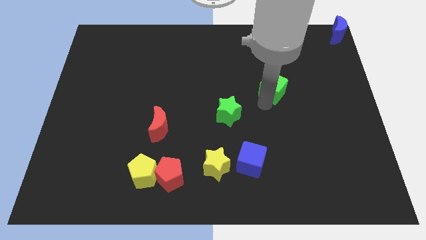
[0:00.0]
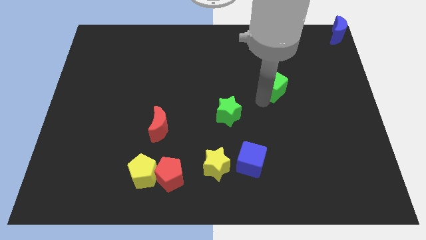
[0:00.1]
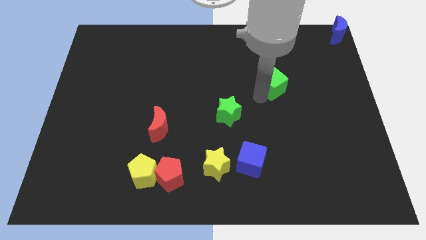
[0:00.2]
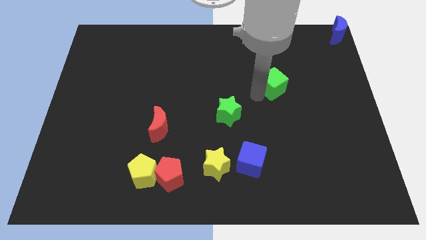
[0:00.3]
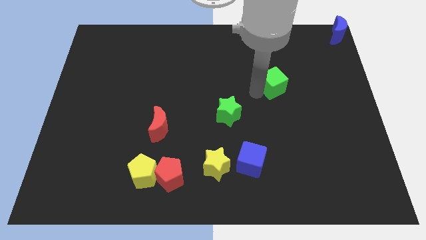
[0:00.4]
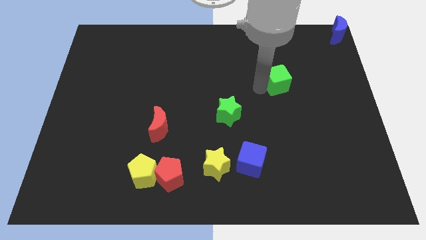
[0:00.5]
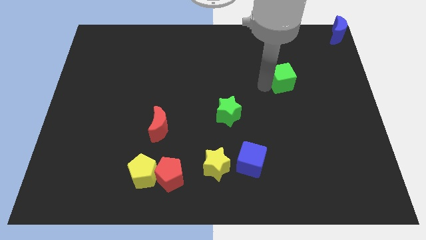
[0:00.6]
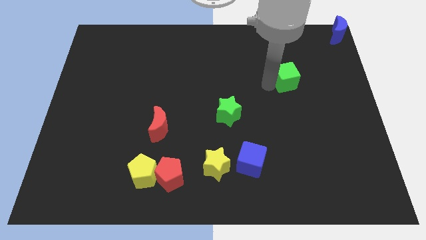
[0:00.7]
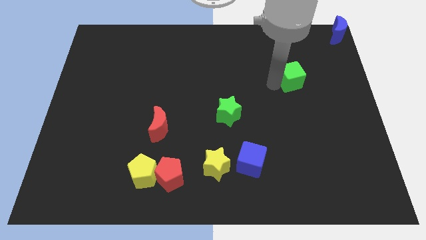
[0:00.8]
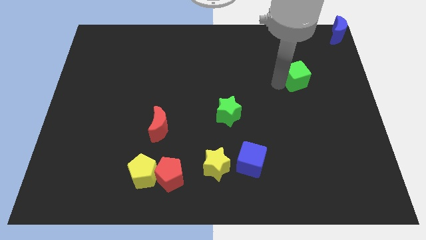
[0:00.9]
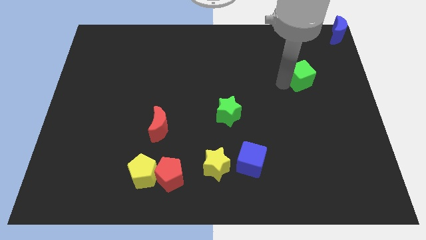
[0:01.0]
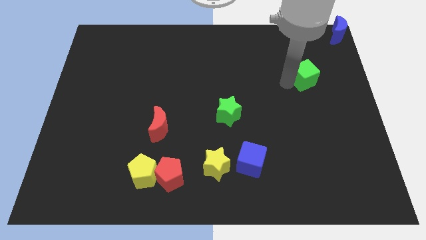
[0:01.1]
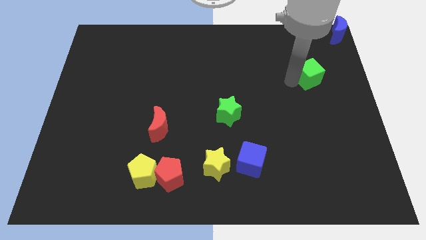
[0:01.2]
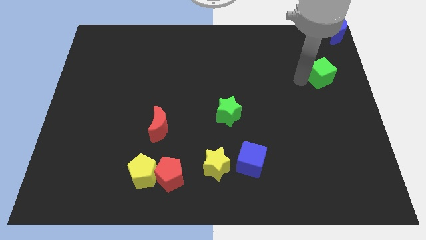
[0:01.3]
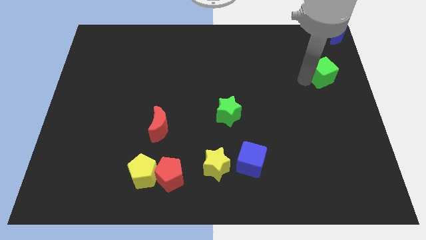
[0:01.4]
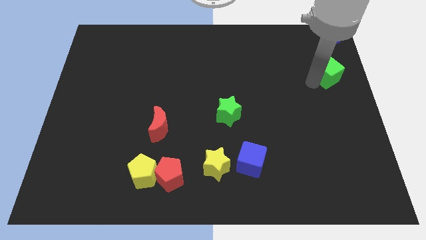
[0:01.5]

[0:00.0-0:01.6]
move green cube towards blue crescent

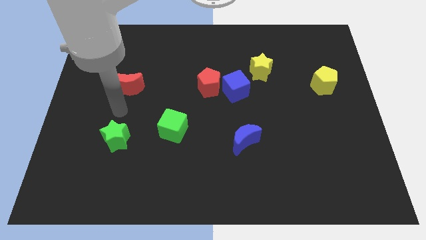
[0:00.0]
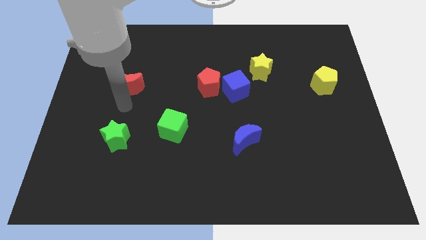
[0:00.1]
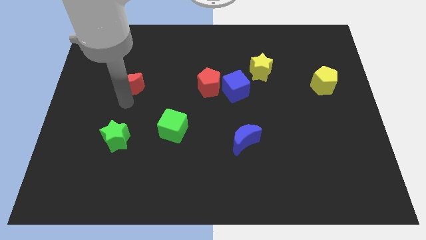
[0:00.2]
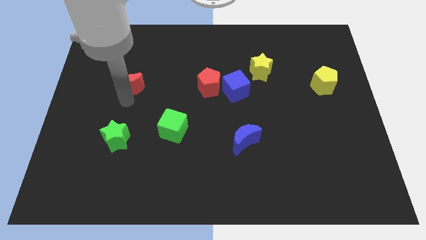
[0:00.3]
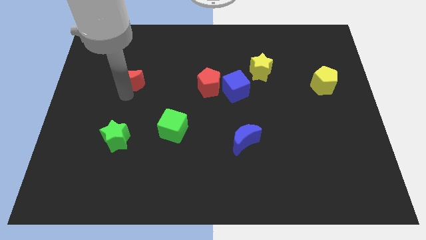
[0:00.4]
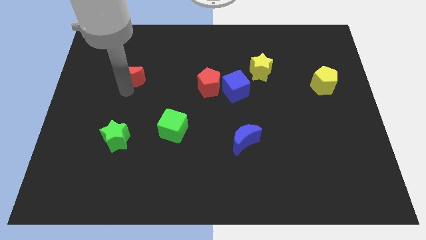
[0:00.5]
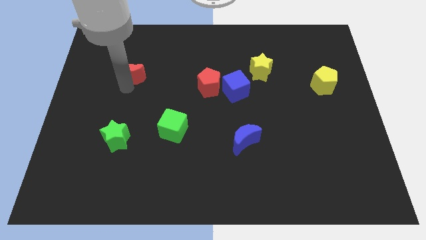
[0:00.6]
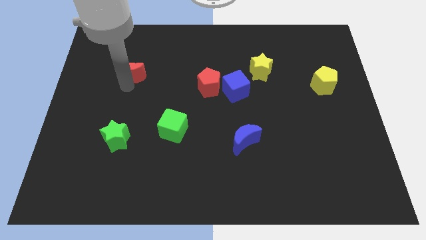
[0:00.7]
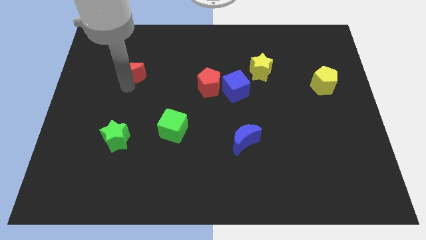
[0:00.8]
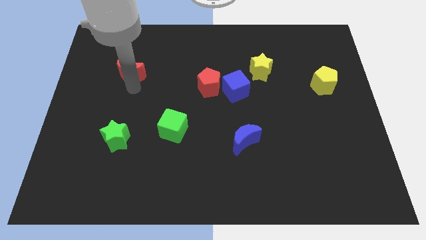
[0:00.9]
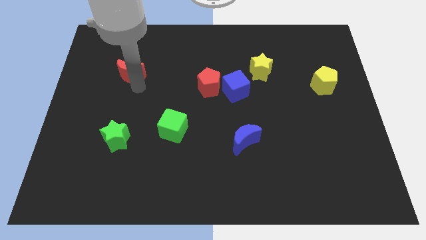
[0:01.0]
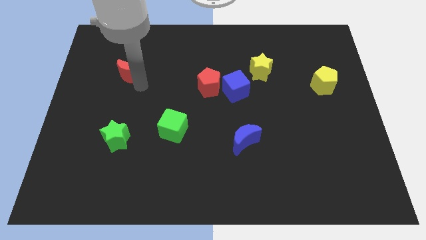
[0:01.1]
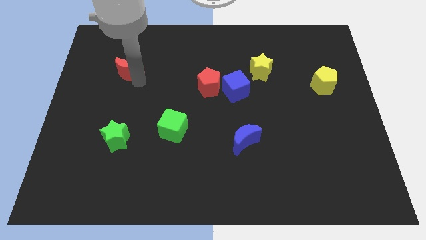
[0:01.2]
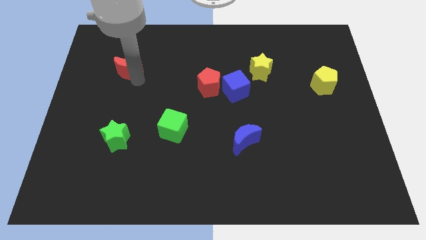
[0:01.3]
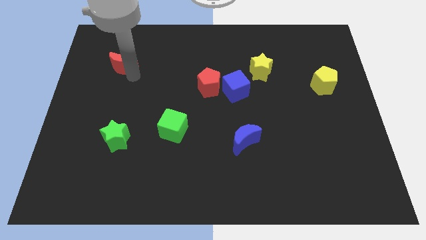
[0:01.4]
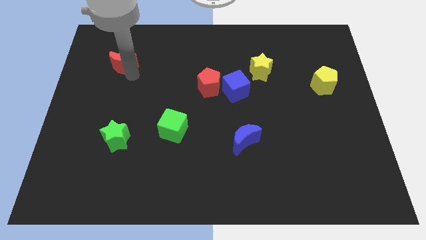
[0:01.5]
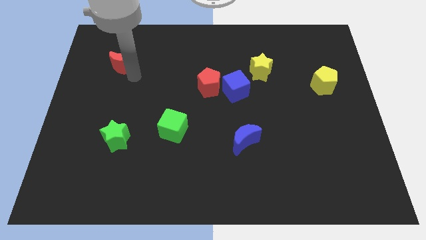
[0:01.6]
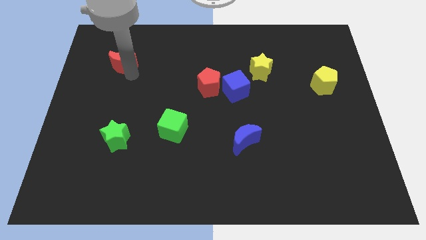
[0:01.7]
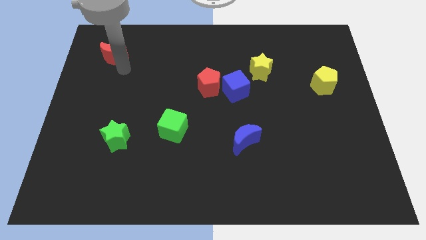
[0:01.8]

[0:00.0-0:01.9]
push the red moon towards top

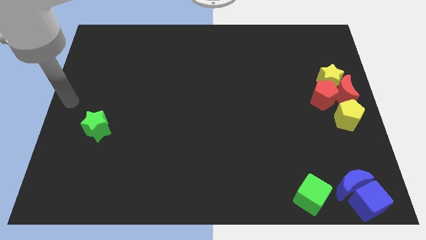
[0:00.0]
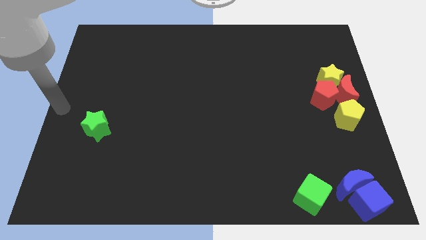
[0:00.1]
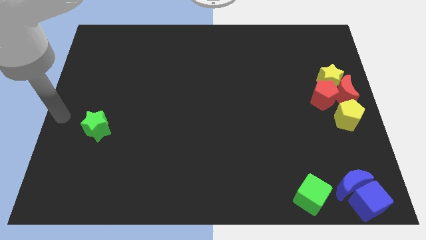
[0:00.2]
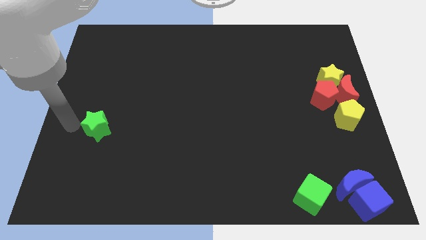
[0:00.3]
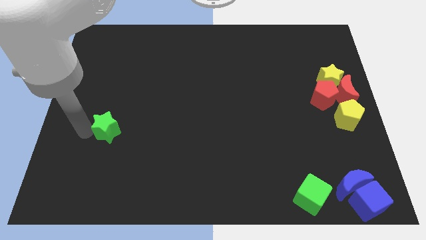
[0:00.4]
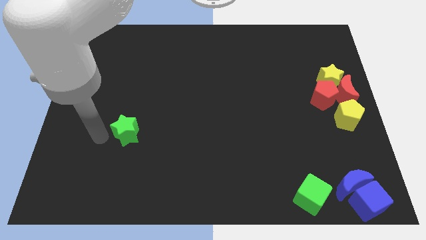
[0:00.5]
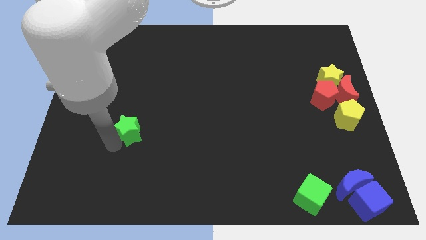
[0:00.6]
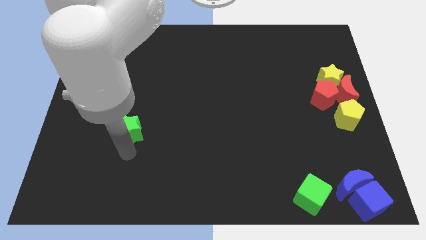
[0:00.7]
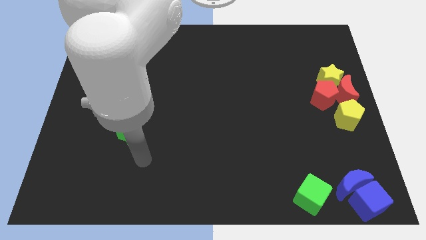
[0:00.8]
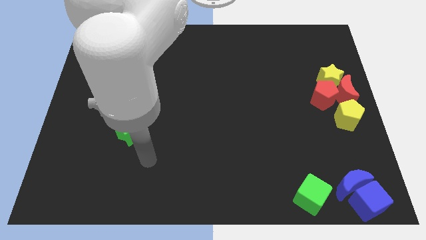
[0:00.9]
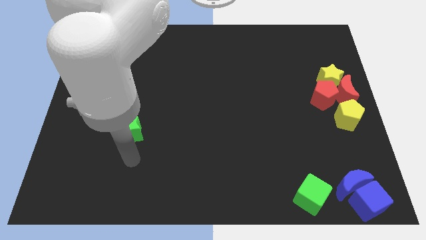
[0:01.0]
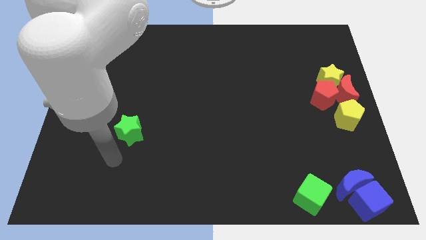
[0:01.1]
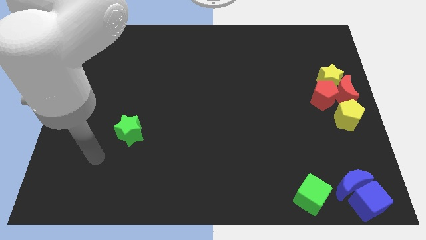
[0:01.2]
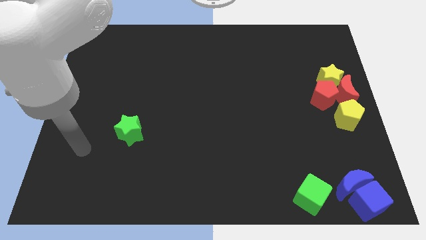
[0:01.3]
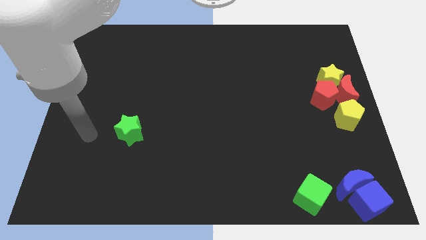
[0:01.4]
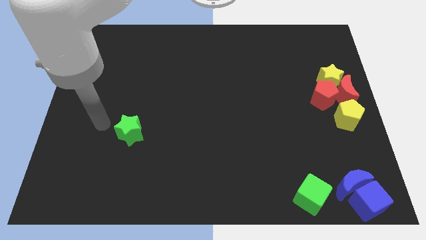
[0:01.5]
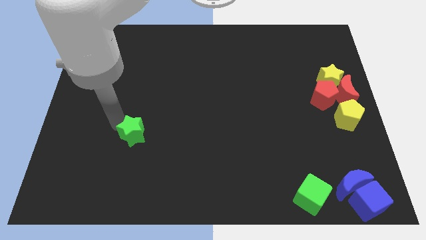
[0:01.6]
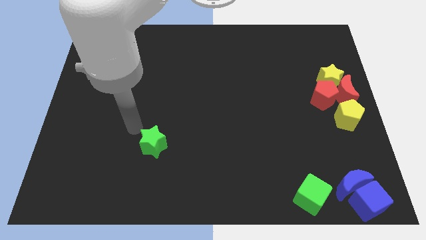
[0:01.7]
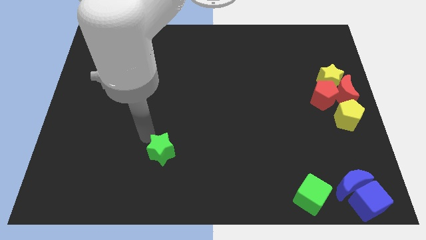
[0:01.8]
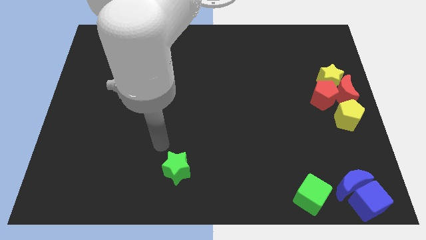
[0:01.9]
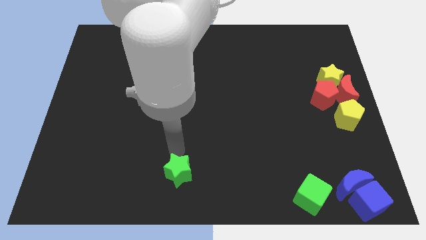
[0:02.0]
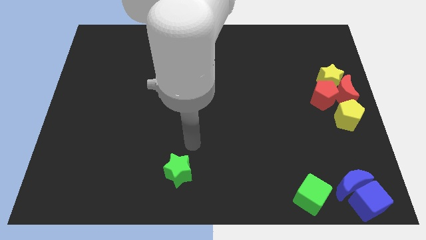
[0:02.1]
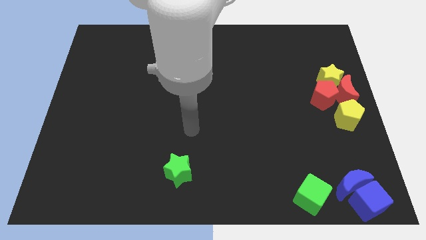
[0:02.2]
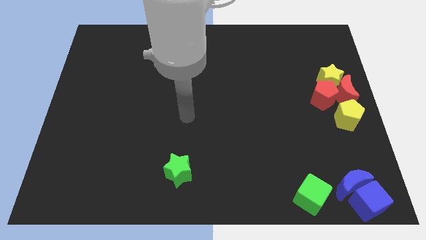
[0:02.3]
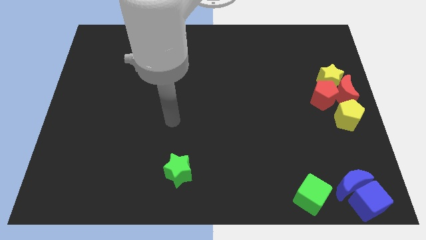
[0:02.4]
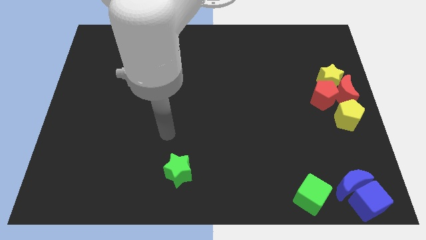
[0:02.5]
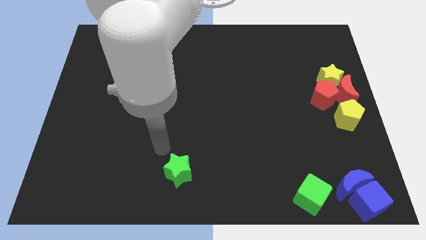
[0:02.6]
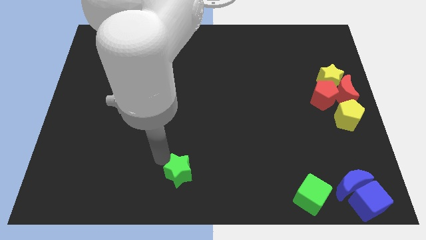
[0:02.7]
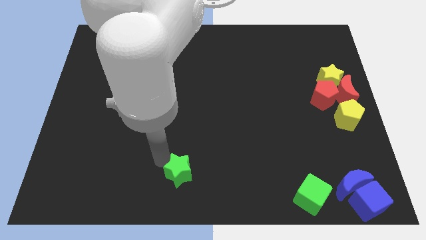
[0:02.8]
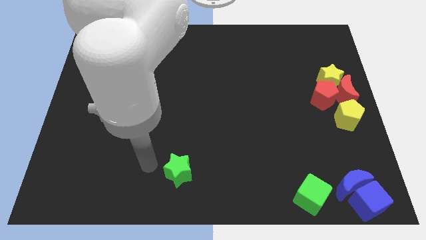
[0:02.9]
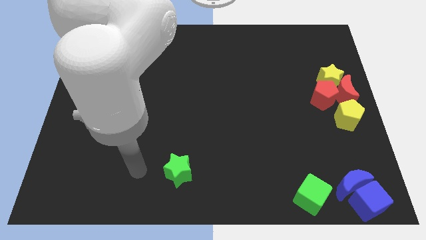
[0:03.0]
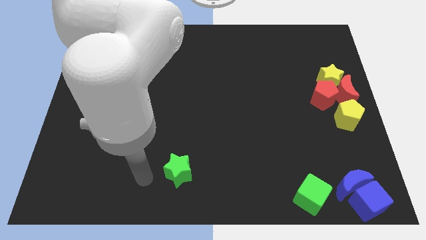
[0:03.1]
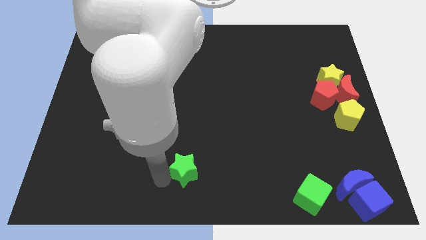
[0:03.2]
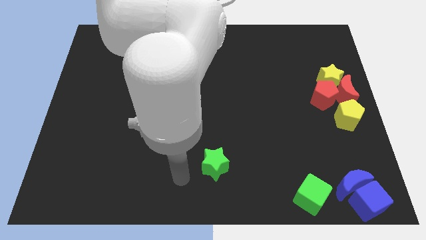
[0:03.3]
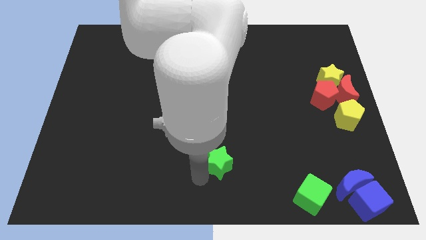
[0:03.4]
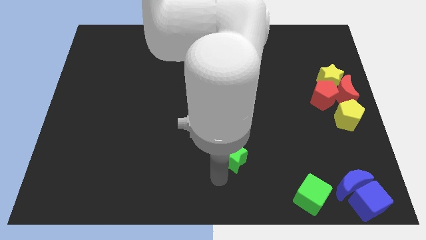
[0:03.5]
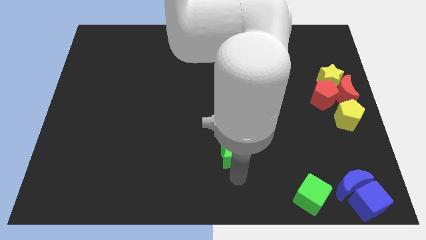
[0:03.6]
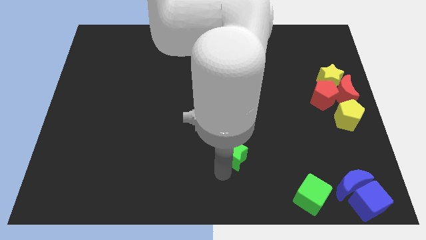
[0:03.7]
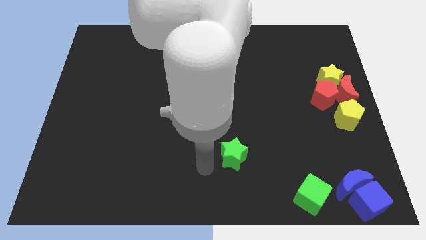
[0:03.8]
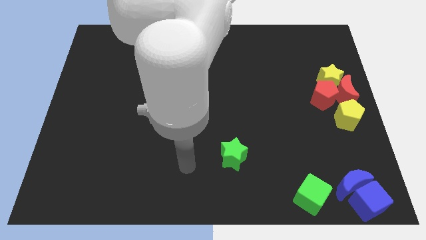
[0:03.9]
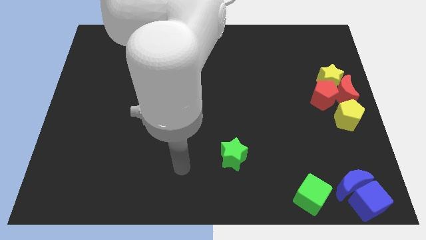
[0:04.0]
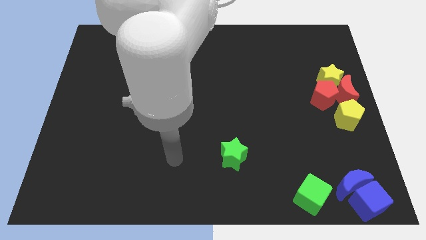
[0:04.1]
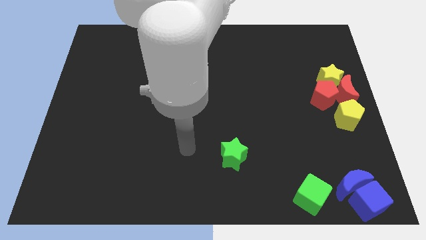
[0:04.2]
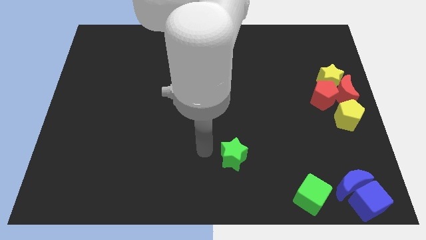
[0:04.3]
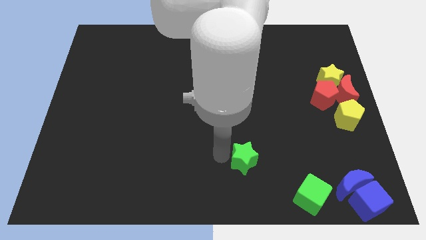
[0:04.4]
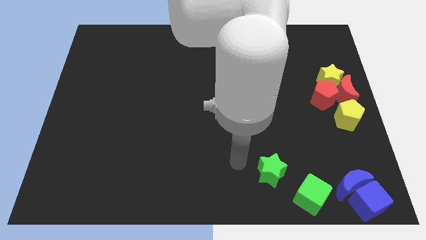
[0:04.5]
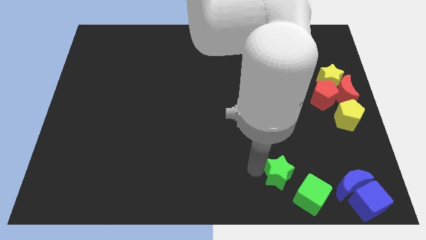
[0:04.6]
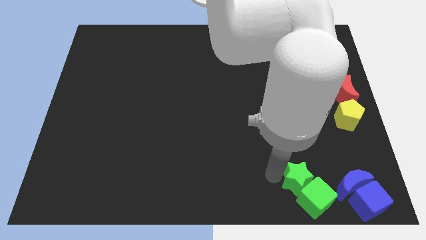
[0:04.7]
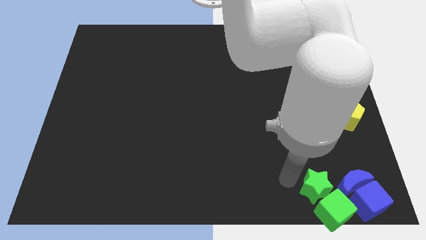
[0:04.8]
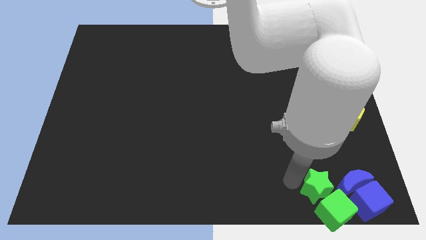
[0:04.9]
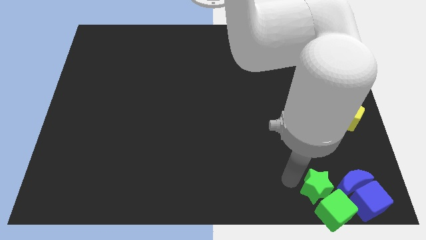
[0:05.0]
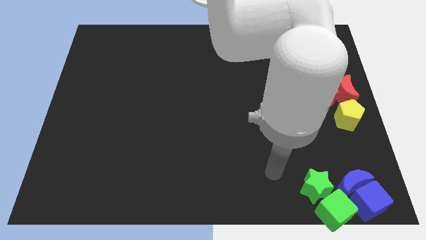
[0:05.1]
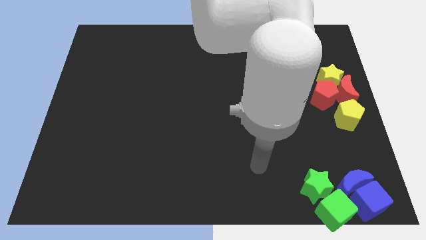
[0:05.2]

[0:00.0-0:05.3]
push the green star into the green cube

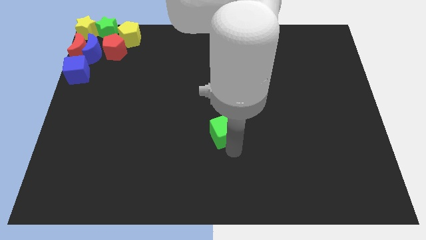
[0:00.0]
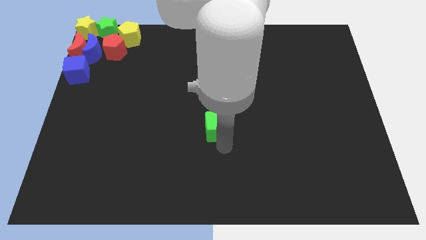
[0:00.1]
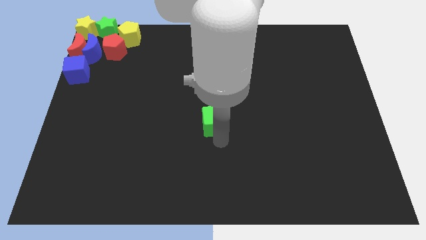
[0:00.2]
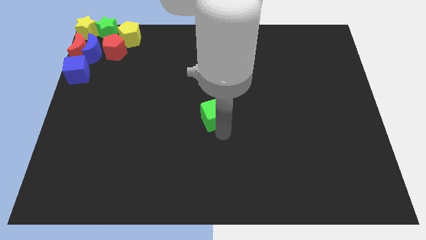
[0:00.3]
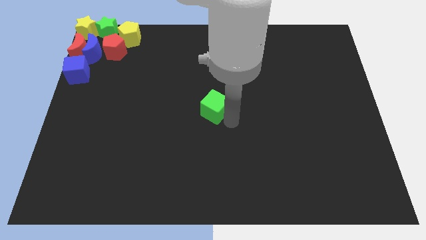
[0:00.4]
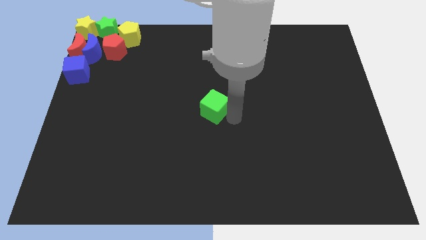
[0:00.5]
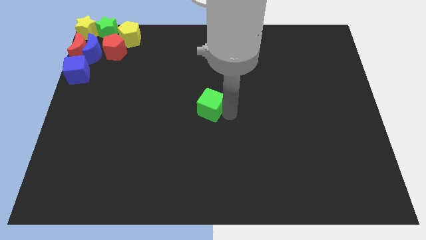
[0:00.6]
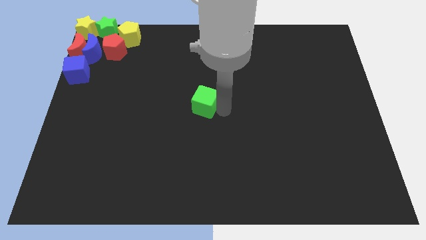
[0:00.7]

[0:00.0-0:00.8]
move the green cube slightly up
